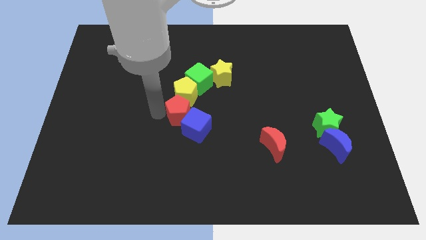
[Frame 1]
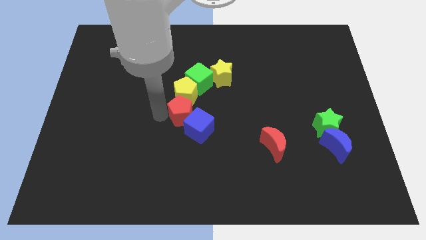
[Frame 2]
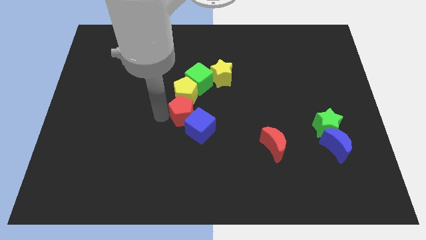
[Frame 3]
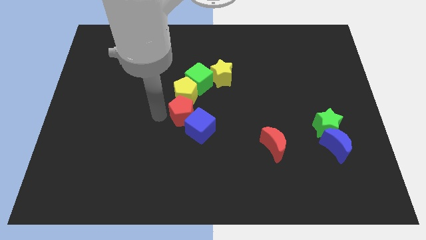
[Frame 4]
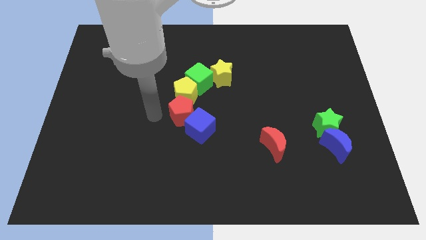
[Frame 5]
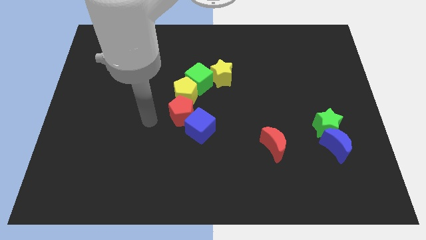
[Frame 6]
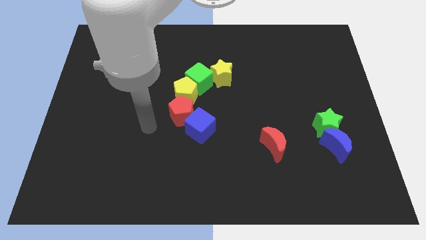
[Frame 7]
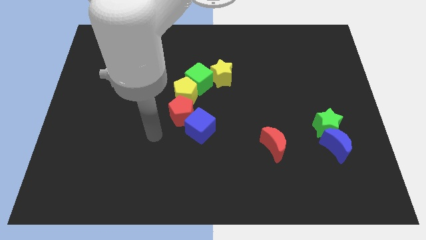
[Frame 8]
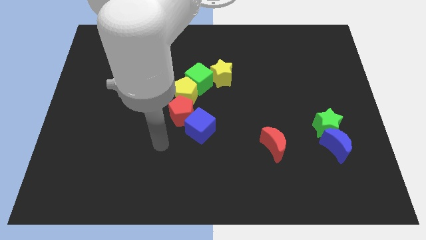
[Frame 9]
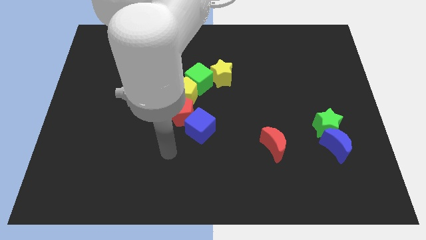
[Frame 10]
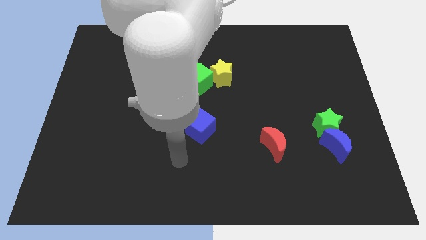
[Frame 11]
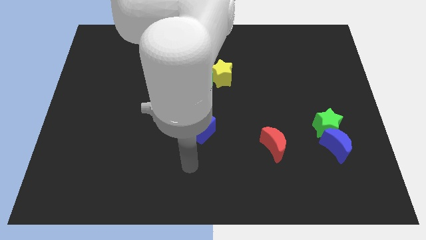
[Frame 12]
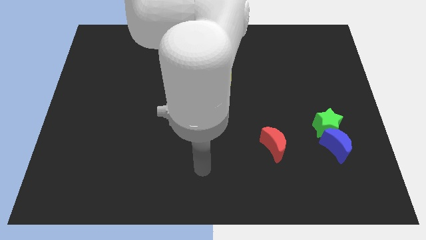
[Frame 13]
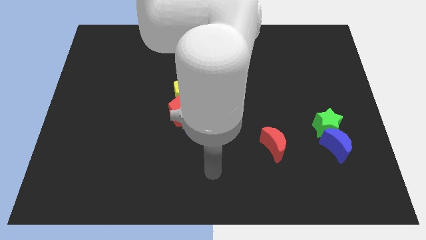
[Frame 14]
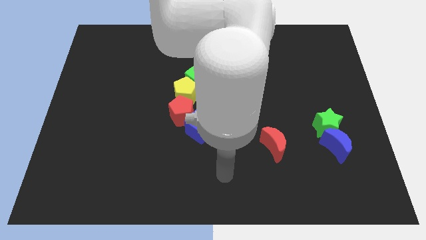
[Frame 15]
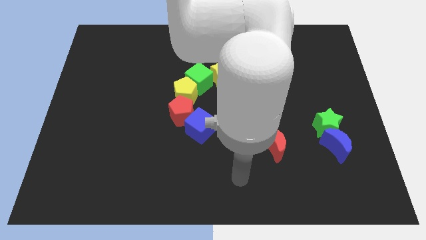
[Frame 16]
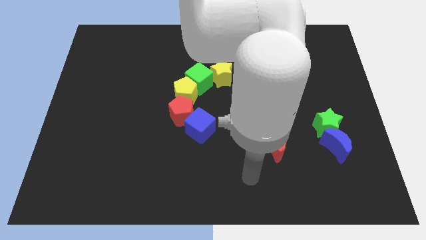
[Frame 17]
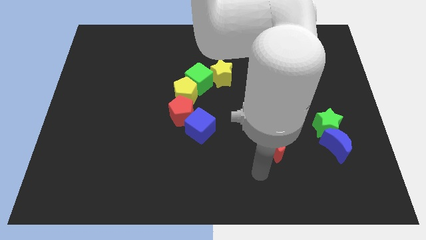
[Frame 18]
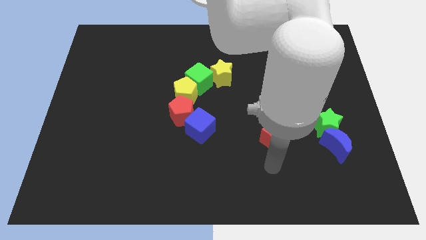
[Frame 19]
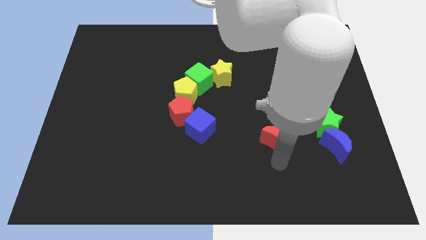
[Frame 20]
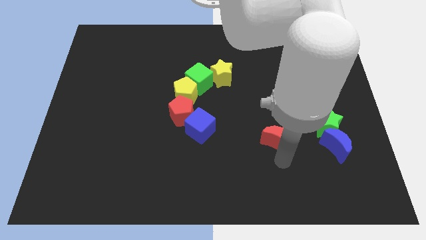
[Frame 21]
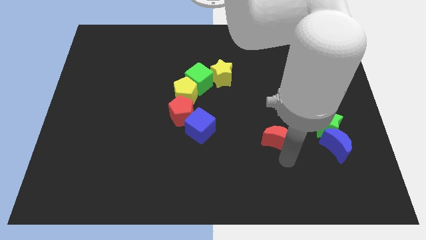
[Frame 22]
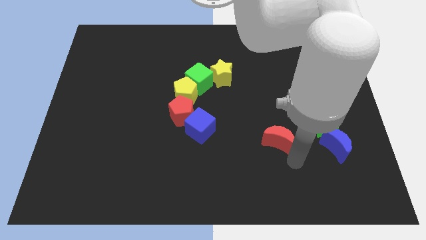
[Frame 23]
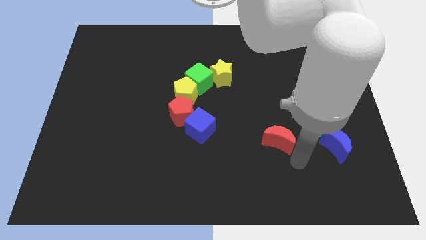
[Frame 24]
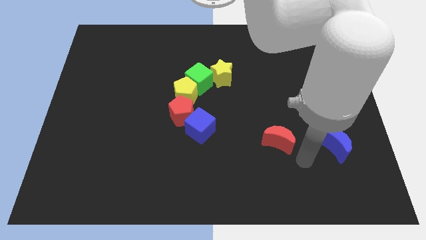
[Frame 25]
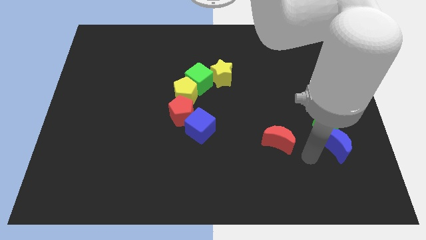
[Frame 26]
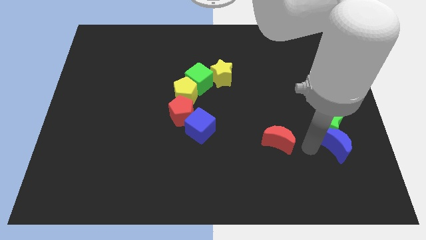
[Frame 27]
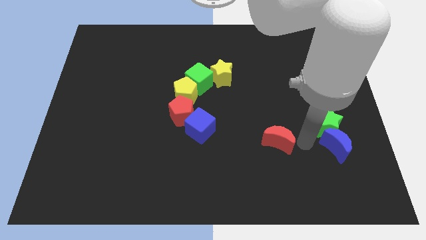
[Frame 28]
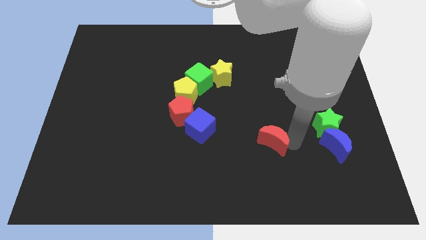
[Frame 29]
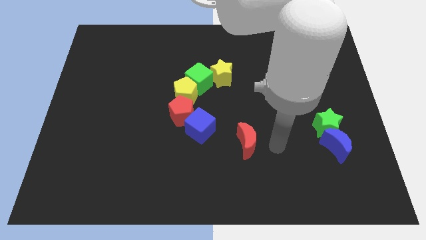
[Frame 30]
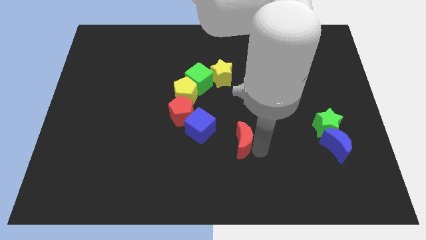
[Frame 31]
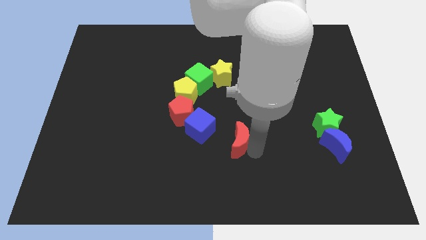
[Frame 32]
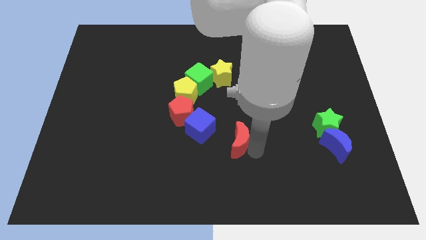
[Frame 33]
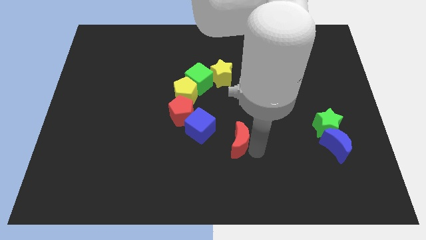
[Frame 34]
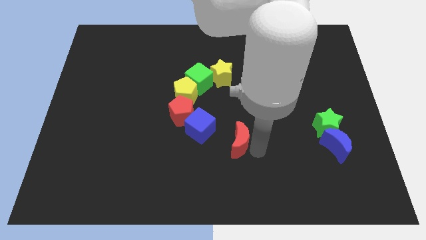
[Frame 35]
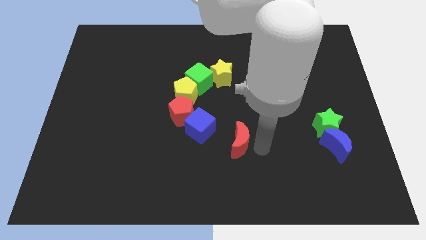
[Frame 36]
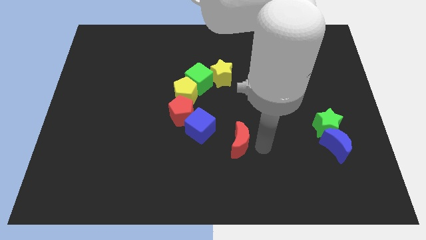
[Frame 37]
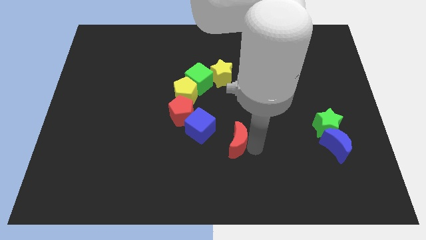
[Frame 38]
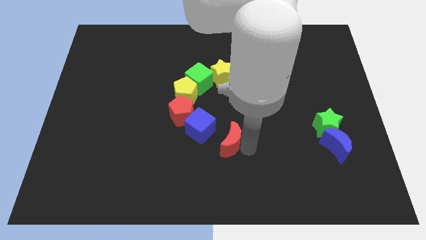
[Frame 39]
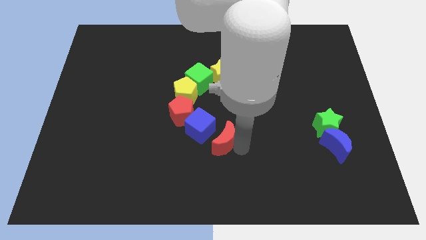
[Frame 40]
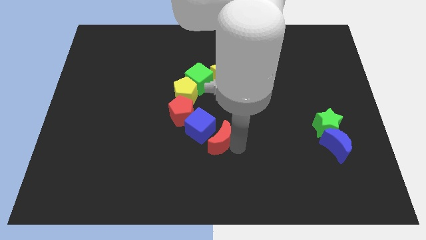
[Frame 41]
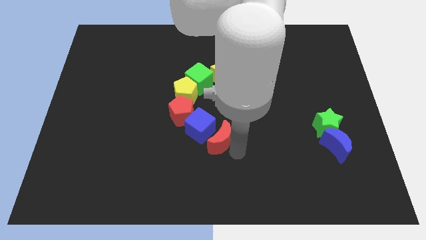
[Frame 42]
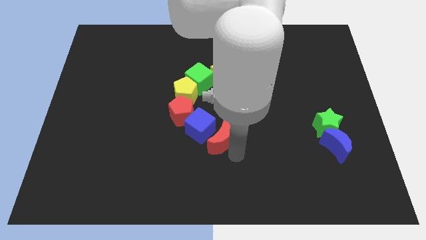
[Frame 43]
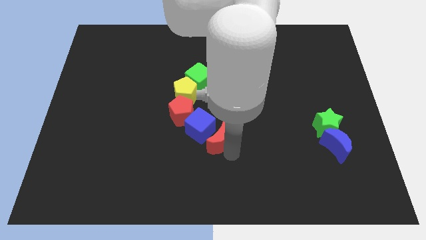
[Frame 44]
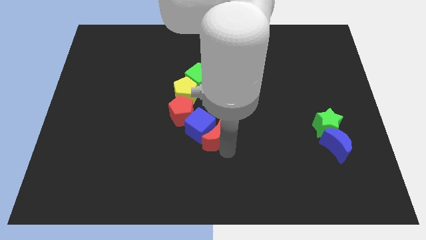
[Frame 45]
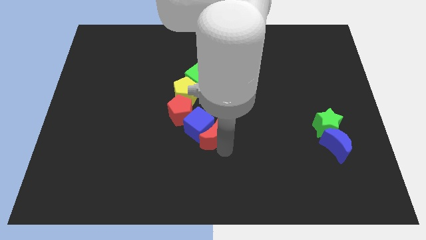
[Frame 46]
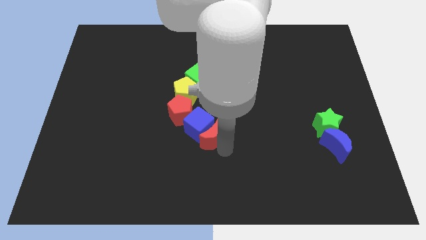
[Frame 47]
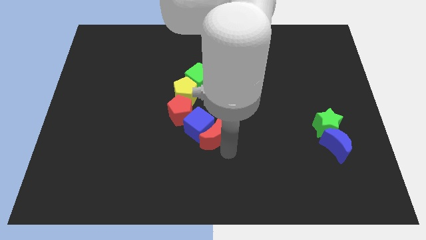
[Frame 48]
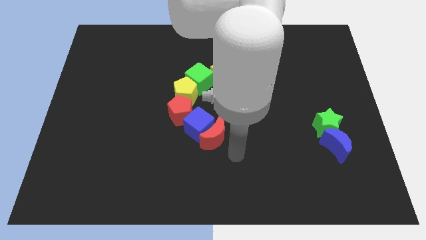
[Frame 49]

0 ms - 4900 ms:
push the red crescent into the blue cube

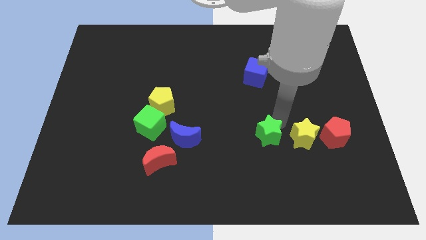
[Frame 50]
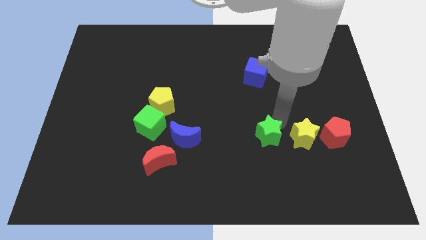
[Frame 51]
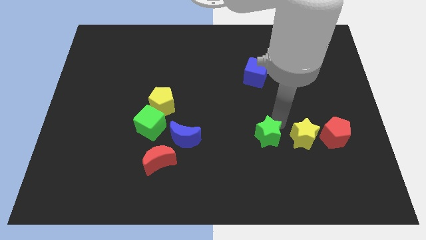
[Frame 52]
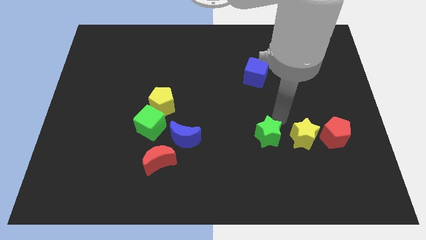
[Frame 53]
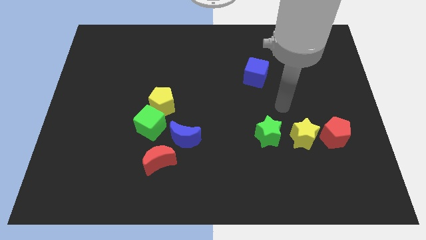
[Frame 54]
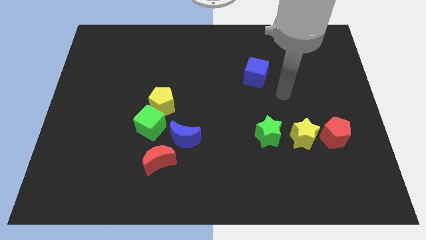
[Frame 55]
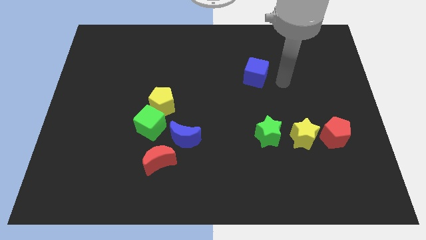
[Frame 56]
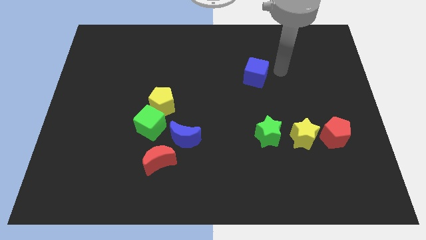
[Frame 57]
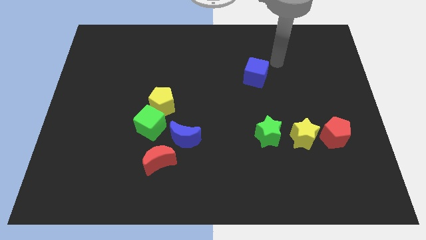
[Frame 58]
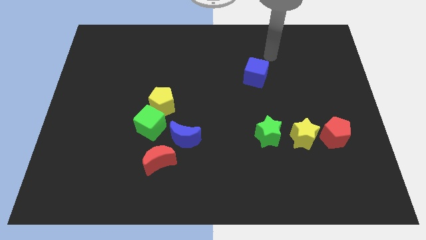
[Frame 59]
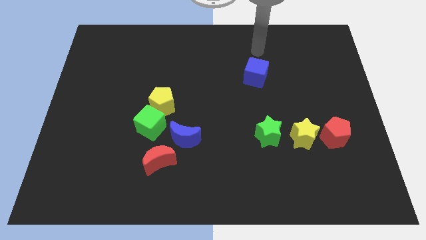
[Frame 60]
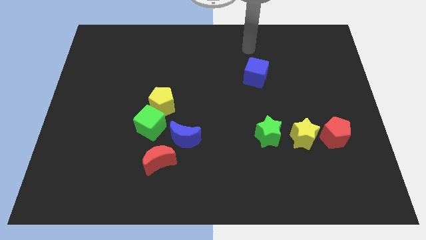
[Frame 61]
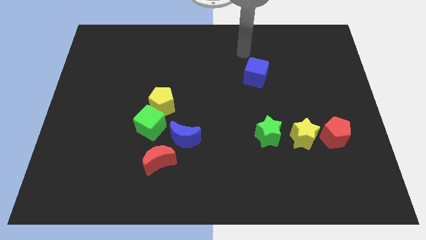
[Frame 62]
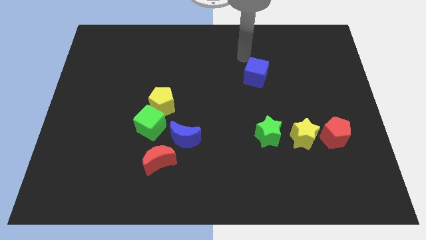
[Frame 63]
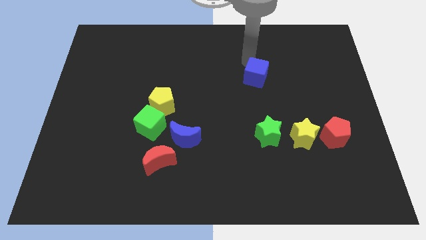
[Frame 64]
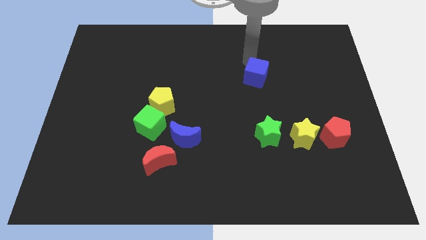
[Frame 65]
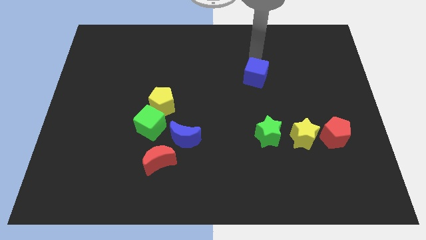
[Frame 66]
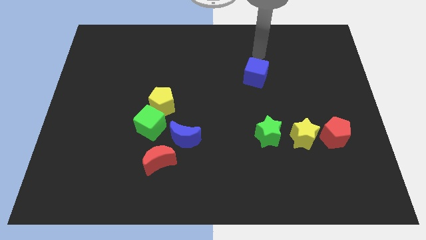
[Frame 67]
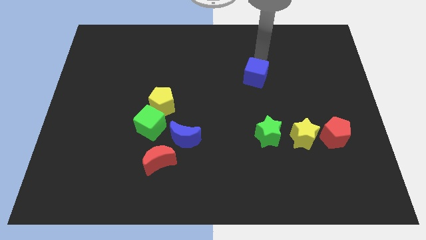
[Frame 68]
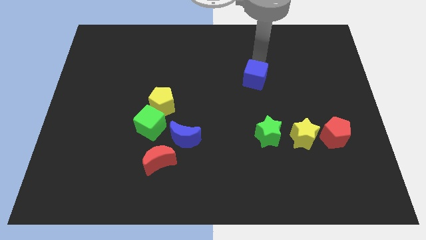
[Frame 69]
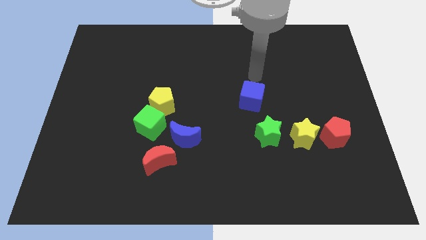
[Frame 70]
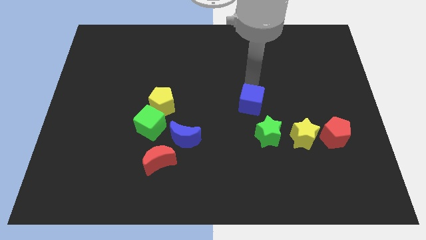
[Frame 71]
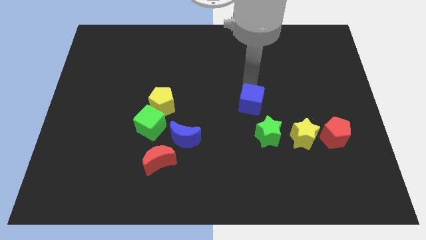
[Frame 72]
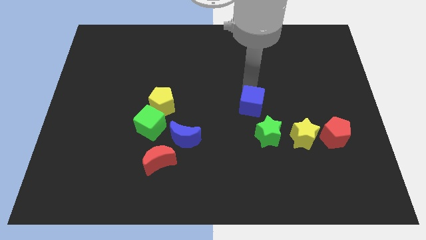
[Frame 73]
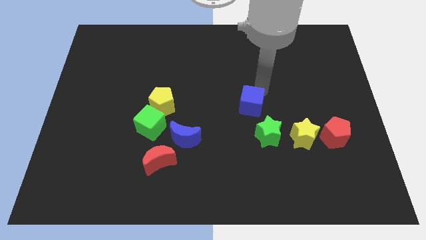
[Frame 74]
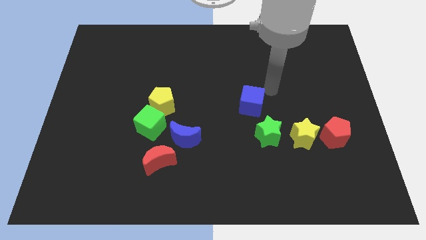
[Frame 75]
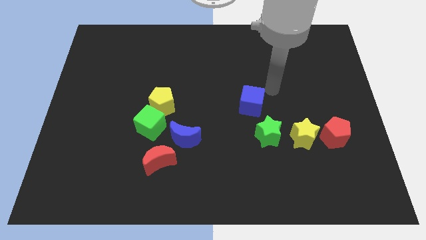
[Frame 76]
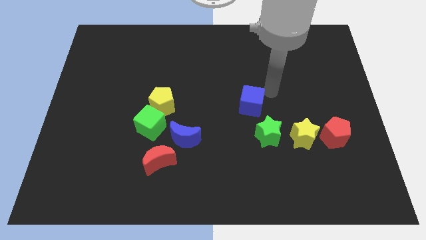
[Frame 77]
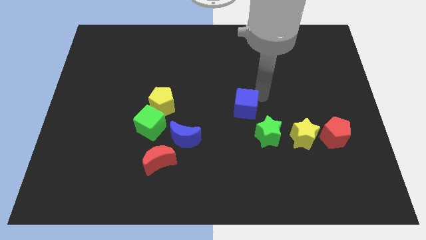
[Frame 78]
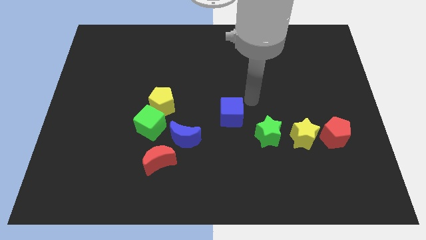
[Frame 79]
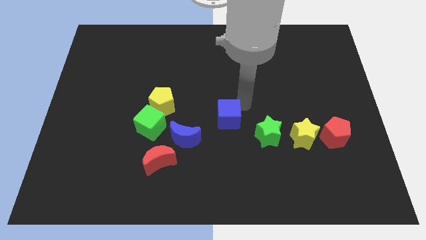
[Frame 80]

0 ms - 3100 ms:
push the blue cube slightly down

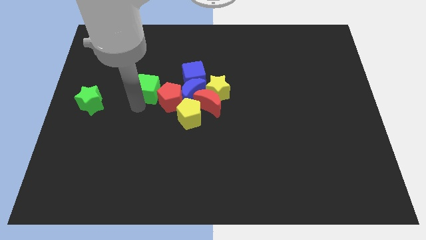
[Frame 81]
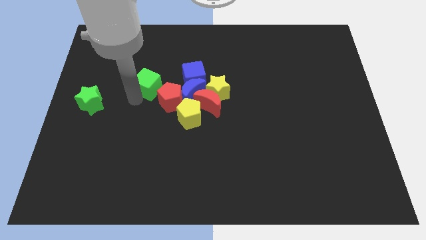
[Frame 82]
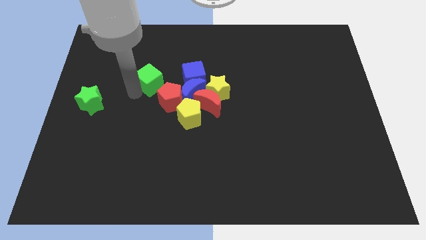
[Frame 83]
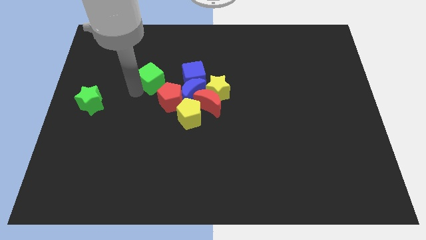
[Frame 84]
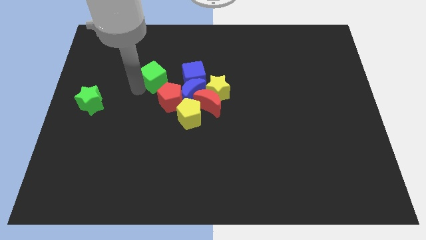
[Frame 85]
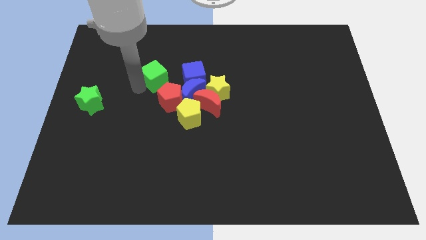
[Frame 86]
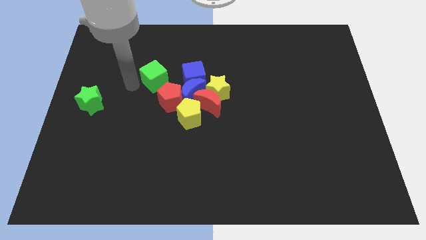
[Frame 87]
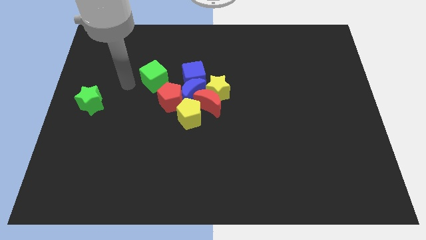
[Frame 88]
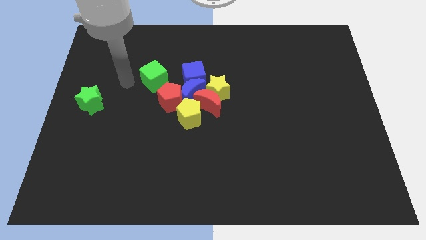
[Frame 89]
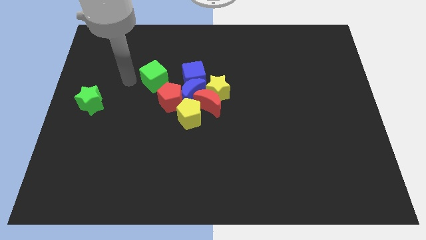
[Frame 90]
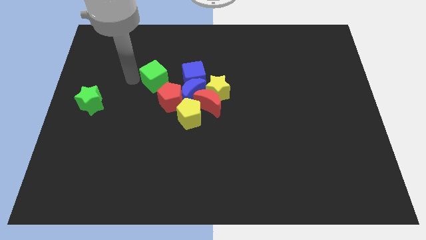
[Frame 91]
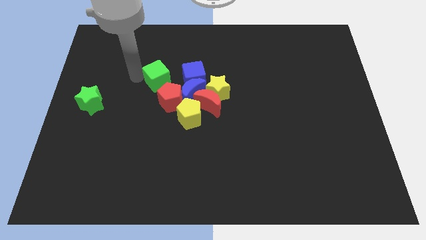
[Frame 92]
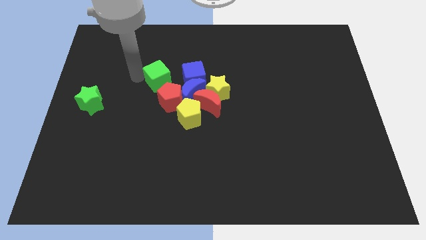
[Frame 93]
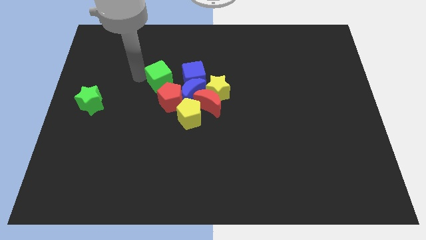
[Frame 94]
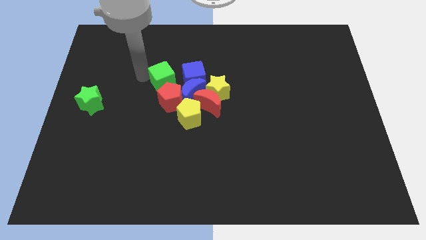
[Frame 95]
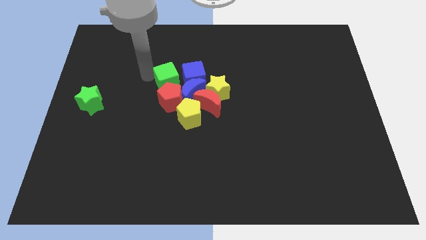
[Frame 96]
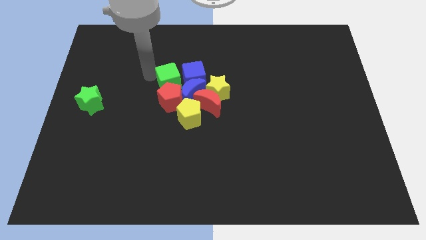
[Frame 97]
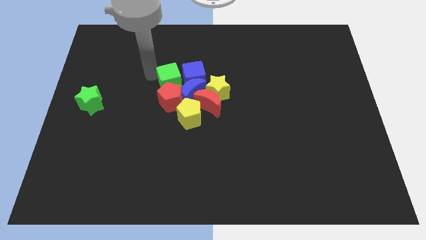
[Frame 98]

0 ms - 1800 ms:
move the green cube to the top of the red pentagon
